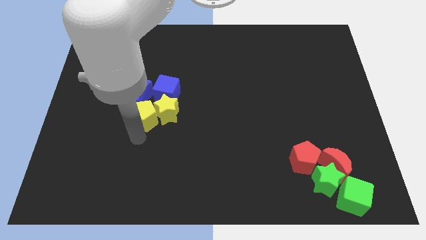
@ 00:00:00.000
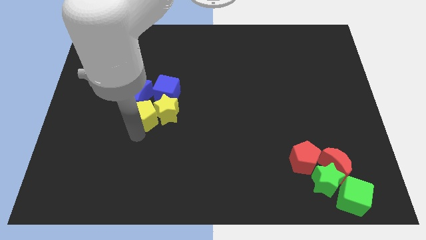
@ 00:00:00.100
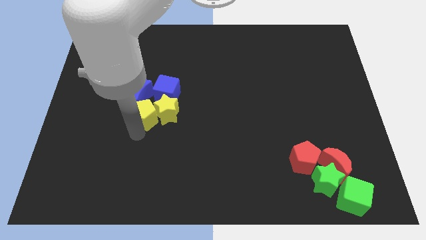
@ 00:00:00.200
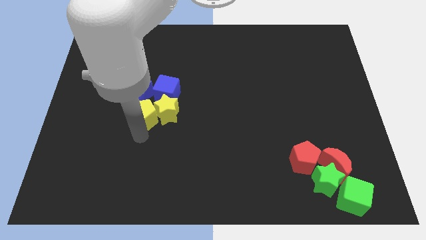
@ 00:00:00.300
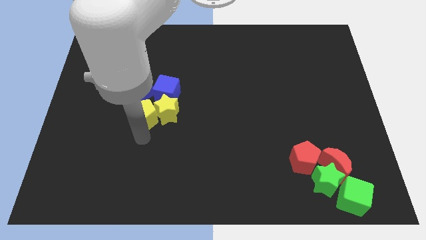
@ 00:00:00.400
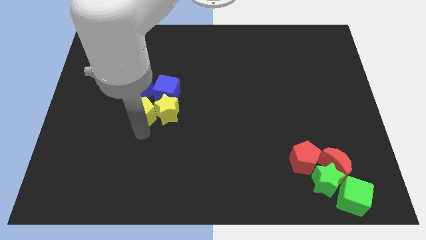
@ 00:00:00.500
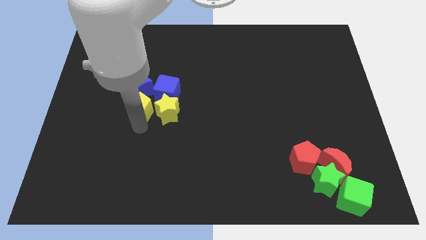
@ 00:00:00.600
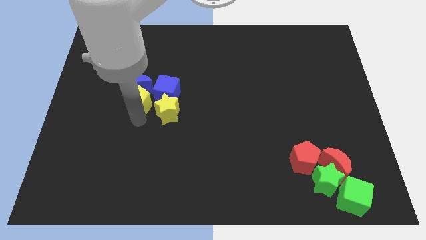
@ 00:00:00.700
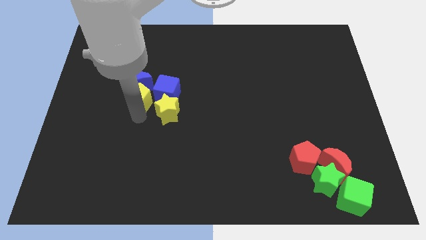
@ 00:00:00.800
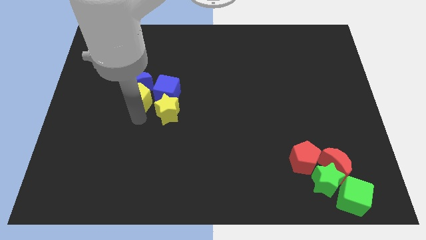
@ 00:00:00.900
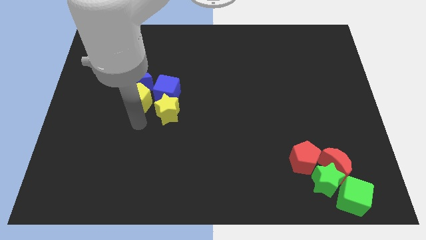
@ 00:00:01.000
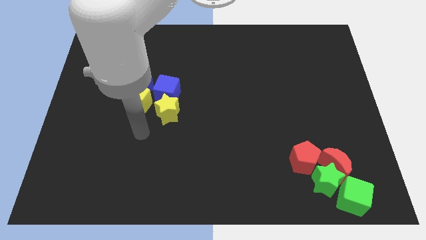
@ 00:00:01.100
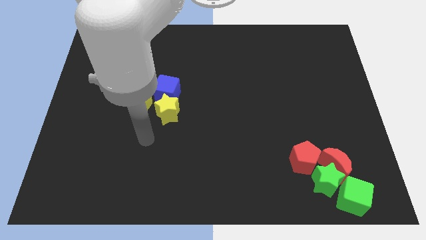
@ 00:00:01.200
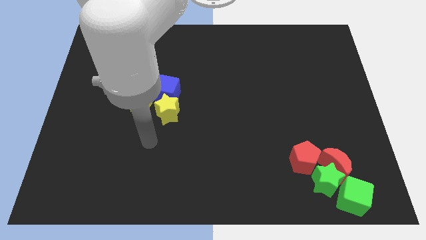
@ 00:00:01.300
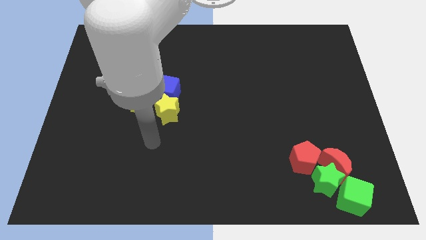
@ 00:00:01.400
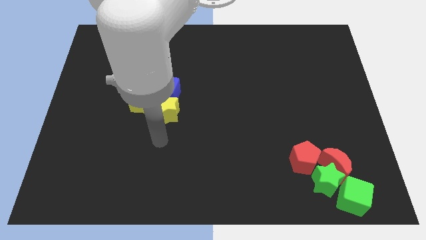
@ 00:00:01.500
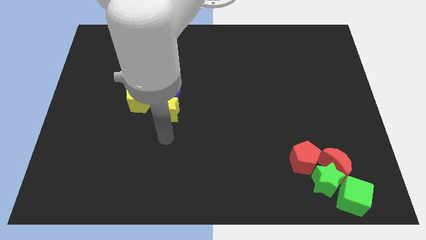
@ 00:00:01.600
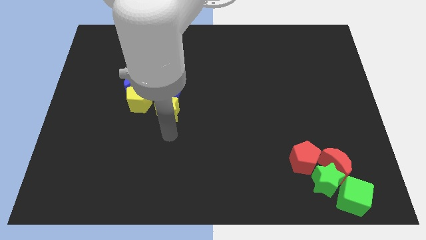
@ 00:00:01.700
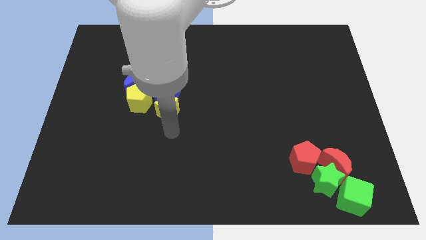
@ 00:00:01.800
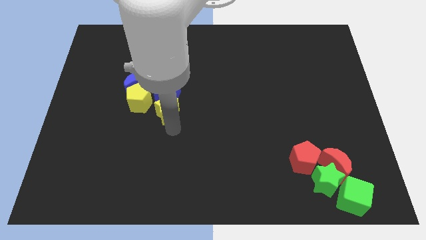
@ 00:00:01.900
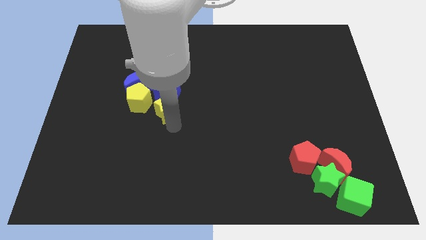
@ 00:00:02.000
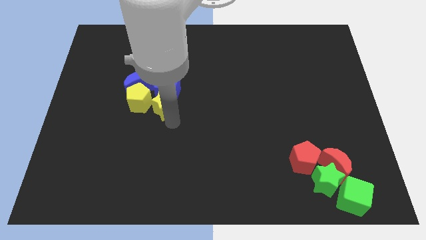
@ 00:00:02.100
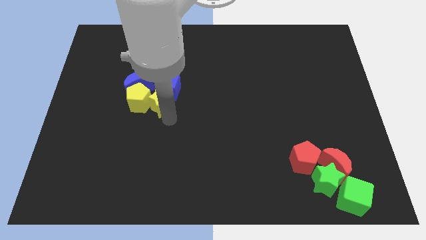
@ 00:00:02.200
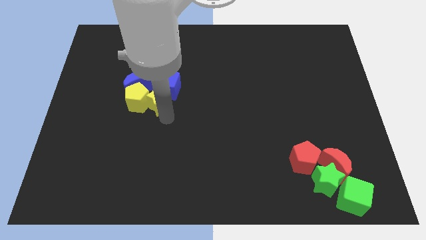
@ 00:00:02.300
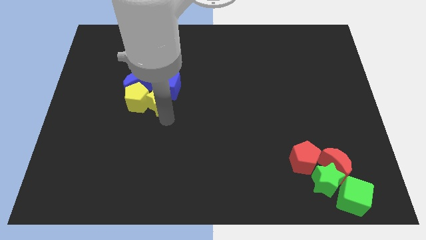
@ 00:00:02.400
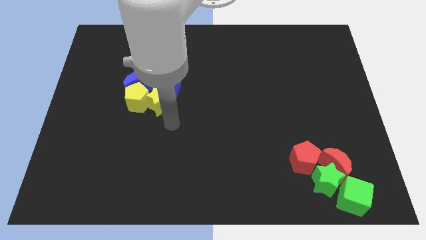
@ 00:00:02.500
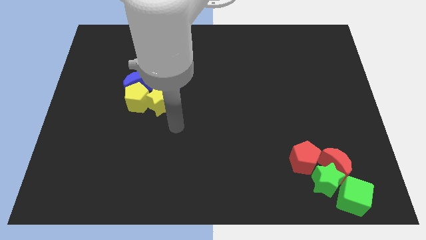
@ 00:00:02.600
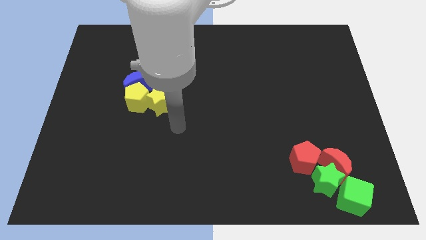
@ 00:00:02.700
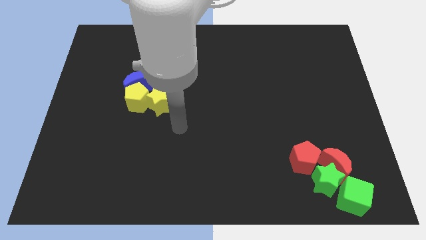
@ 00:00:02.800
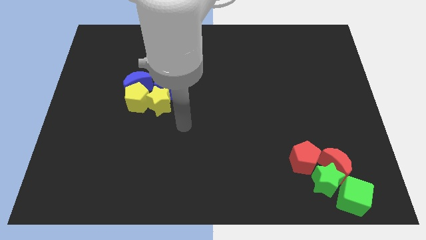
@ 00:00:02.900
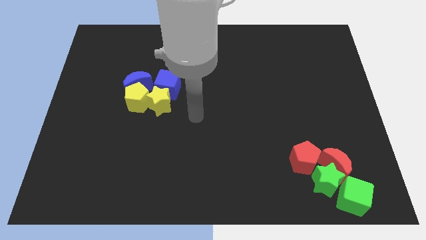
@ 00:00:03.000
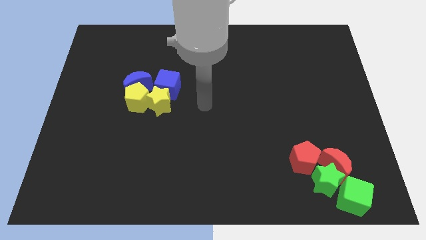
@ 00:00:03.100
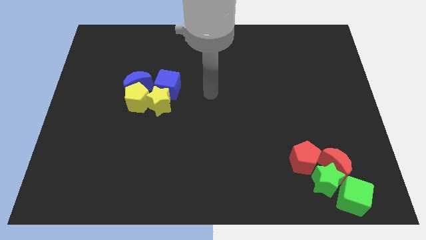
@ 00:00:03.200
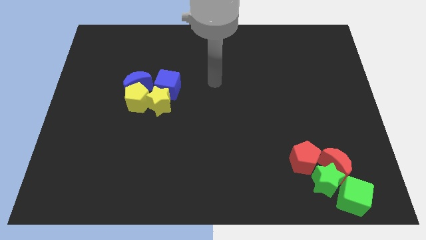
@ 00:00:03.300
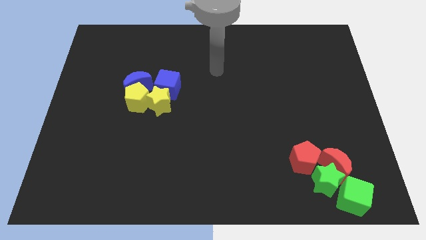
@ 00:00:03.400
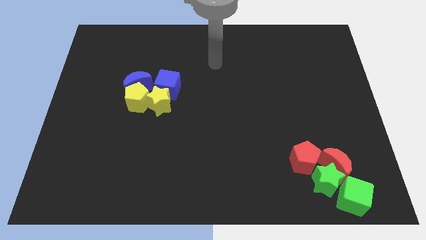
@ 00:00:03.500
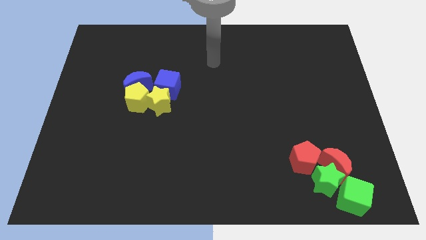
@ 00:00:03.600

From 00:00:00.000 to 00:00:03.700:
push the yellow star into the blue cube

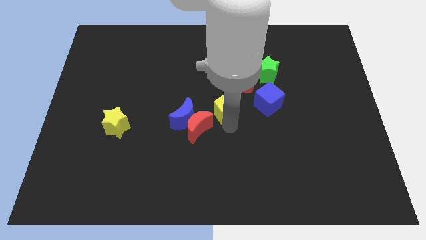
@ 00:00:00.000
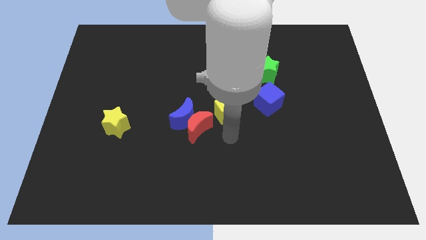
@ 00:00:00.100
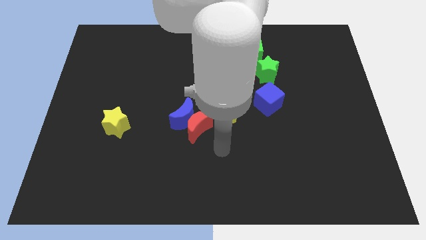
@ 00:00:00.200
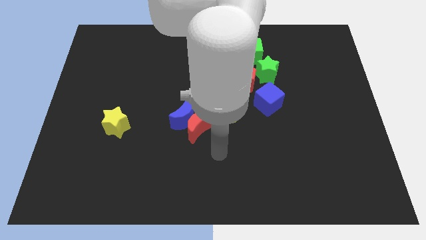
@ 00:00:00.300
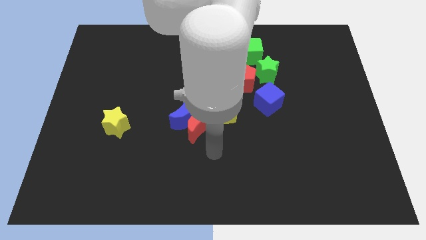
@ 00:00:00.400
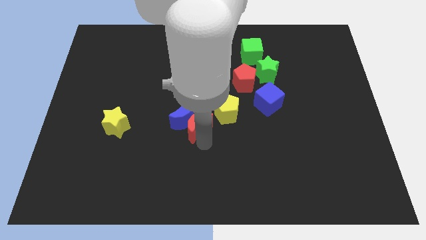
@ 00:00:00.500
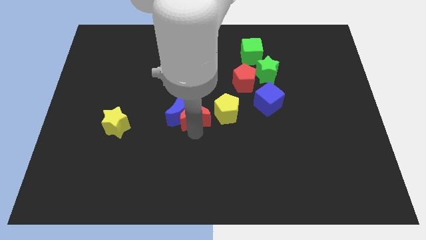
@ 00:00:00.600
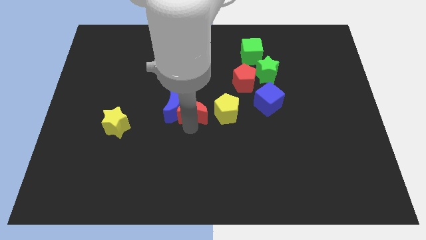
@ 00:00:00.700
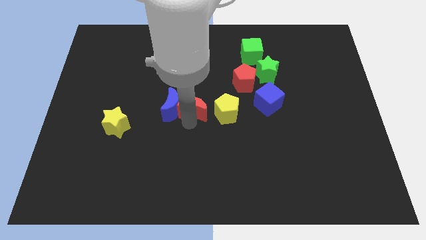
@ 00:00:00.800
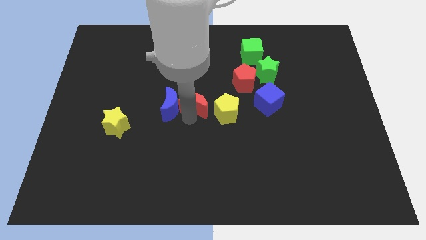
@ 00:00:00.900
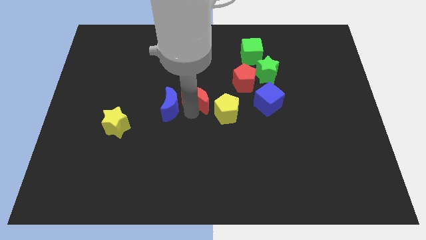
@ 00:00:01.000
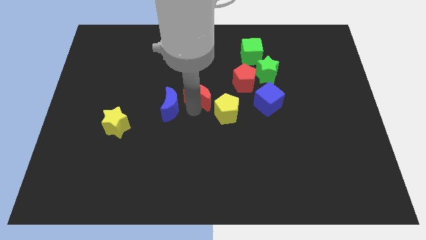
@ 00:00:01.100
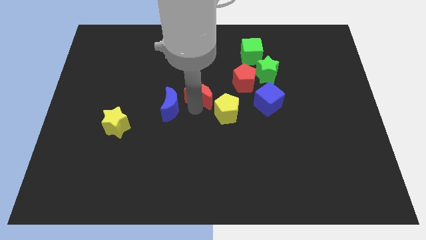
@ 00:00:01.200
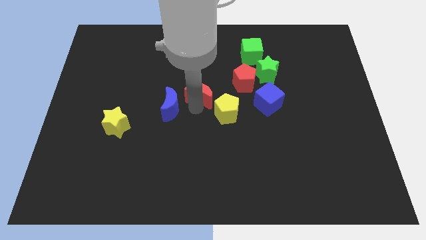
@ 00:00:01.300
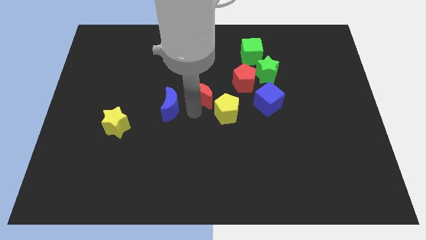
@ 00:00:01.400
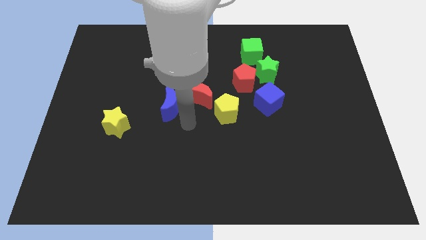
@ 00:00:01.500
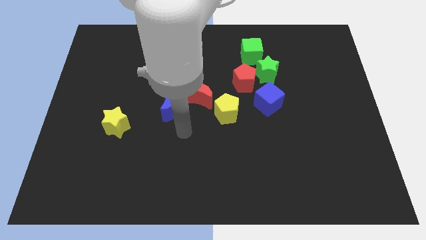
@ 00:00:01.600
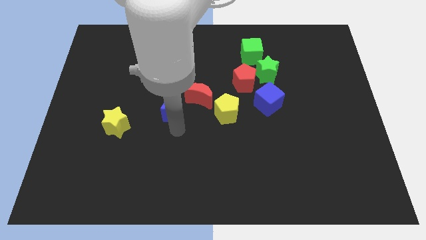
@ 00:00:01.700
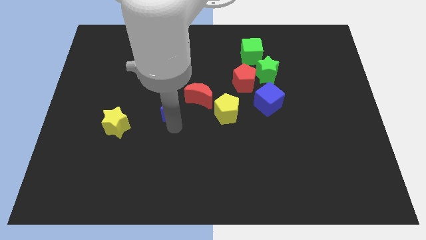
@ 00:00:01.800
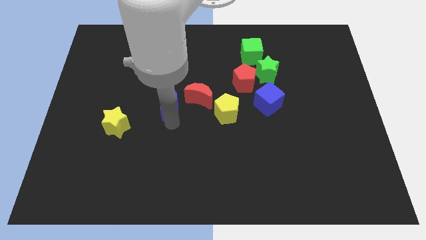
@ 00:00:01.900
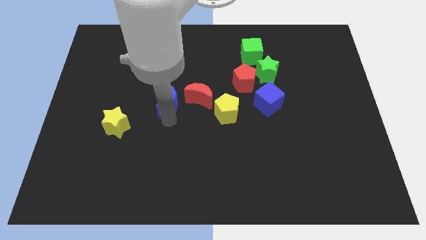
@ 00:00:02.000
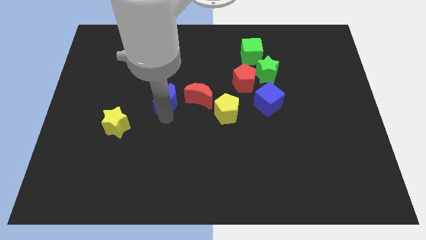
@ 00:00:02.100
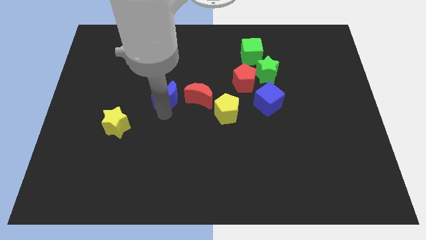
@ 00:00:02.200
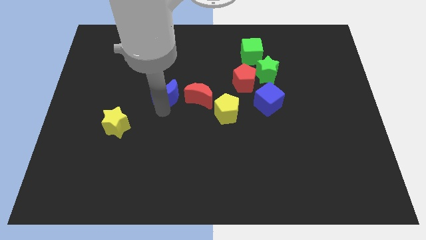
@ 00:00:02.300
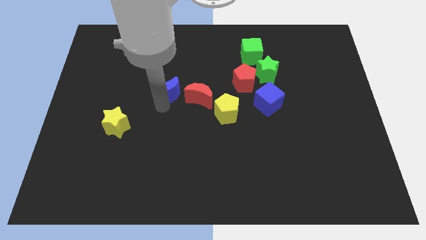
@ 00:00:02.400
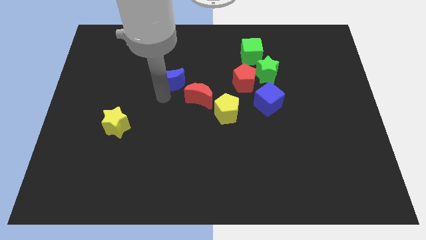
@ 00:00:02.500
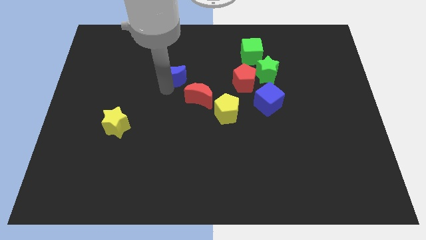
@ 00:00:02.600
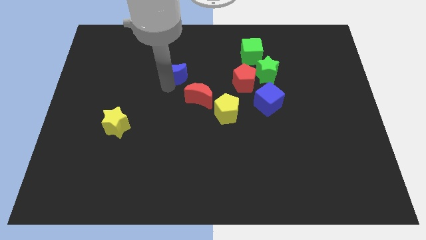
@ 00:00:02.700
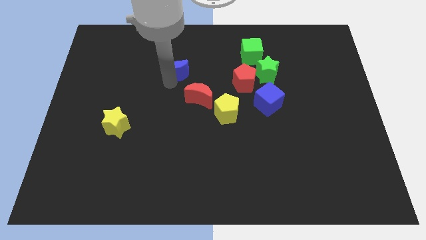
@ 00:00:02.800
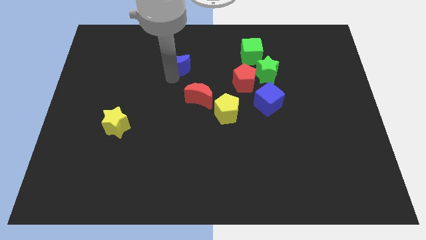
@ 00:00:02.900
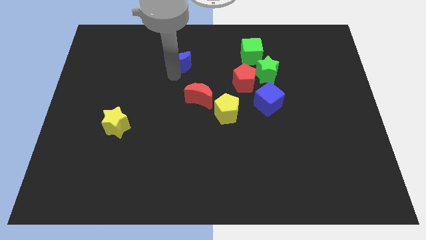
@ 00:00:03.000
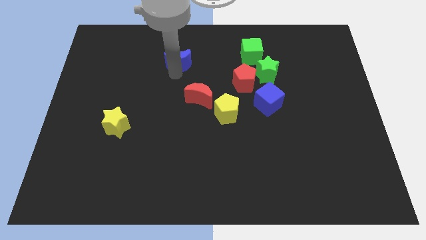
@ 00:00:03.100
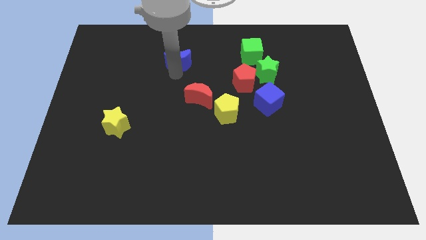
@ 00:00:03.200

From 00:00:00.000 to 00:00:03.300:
drag the blue moon slightly upwards

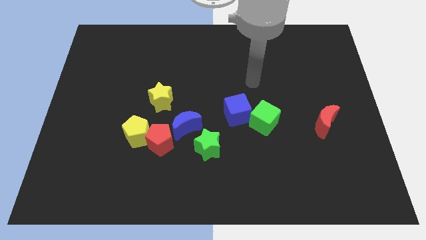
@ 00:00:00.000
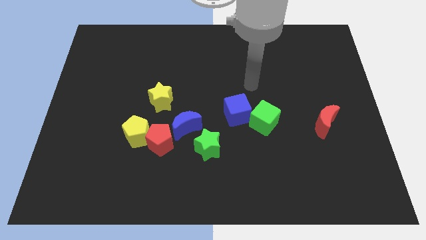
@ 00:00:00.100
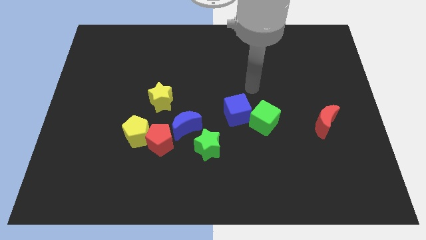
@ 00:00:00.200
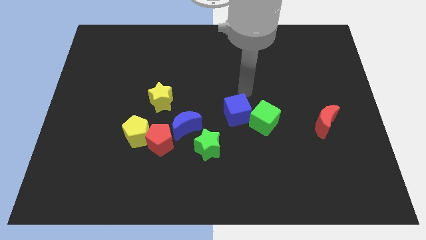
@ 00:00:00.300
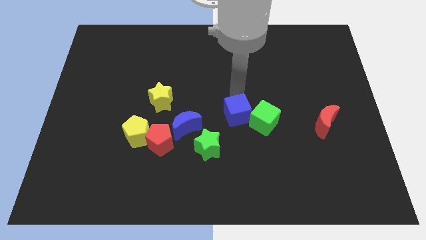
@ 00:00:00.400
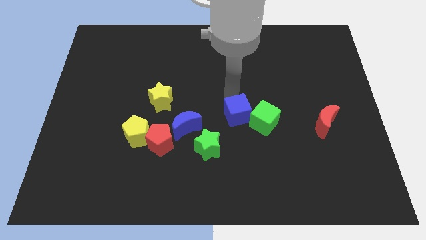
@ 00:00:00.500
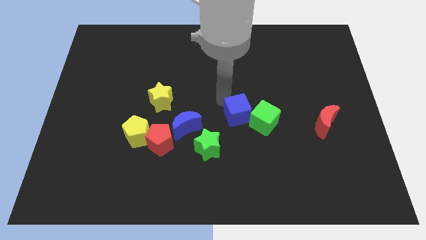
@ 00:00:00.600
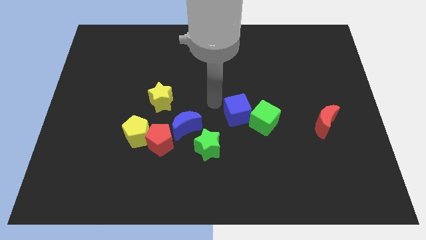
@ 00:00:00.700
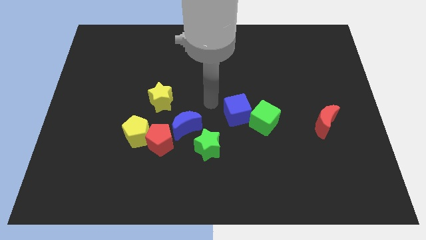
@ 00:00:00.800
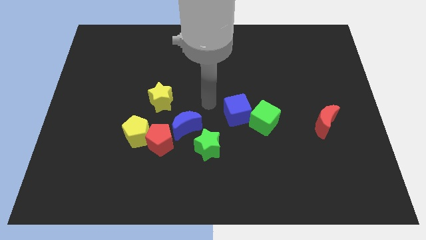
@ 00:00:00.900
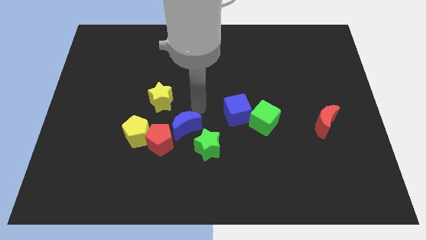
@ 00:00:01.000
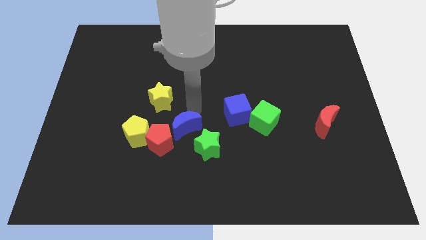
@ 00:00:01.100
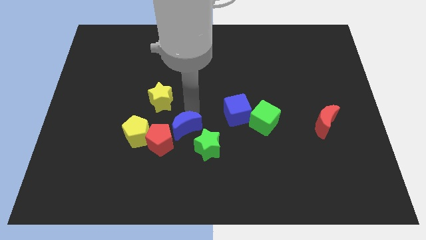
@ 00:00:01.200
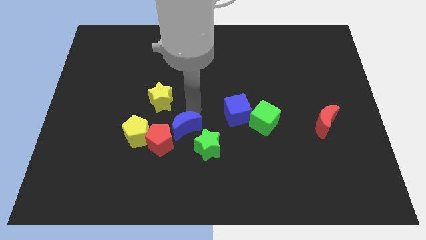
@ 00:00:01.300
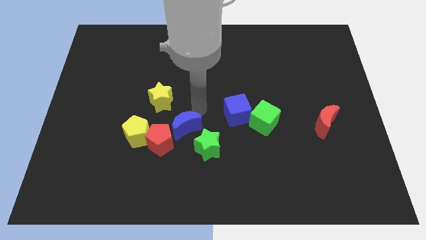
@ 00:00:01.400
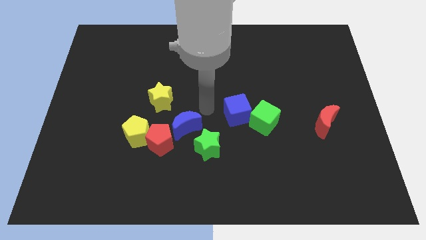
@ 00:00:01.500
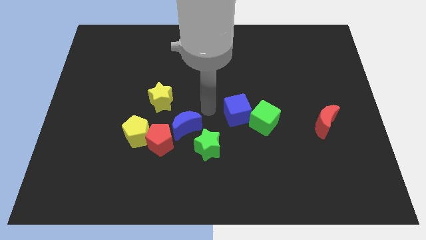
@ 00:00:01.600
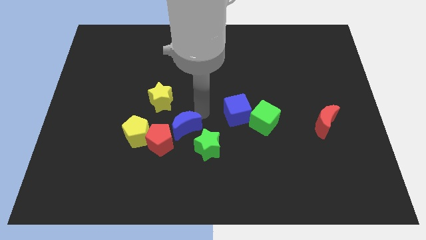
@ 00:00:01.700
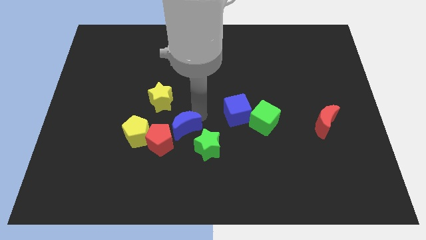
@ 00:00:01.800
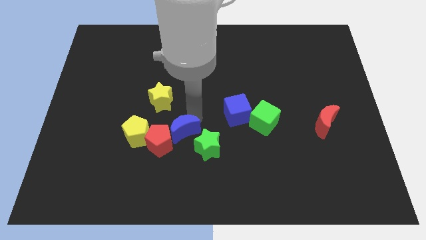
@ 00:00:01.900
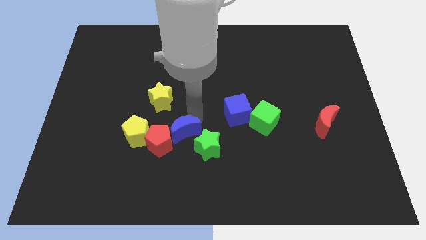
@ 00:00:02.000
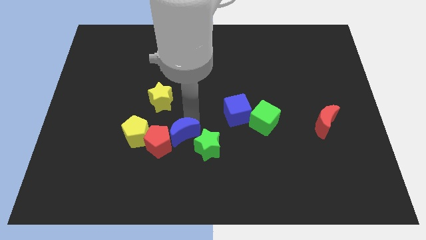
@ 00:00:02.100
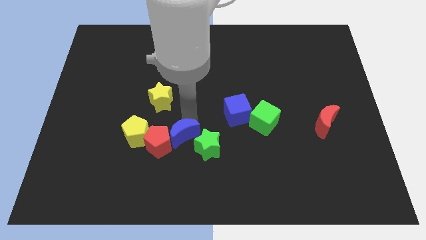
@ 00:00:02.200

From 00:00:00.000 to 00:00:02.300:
tap the blue crescent on the top side
